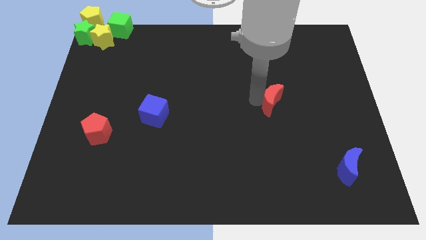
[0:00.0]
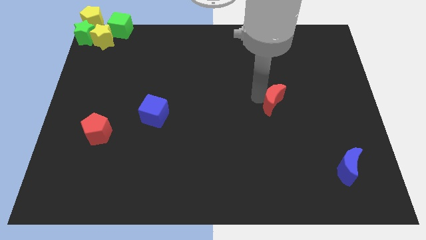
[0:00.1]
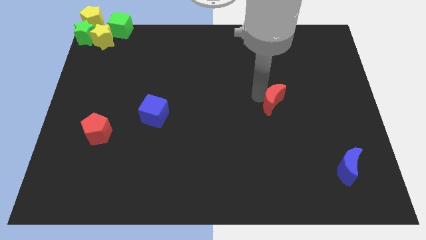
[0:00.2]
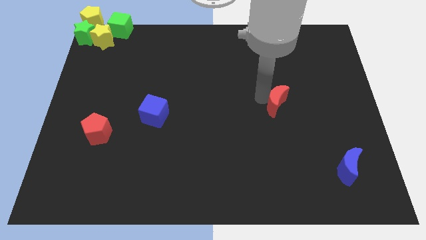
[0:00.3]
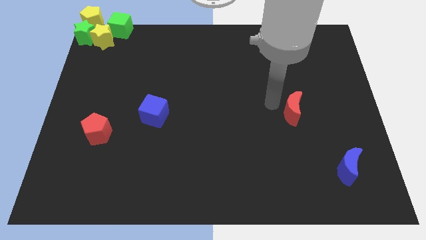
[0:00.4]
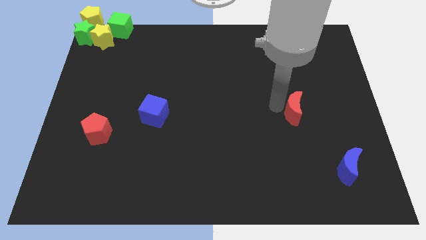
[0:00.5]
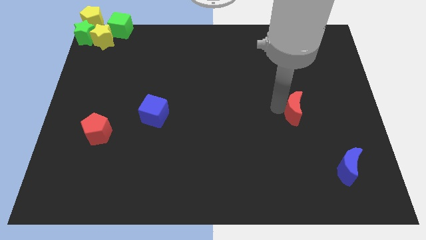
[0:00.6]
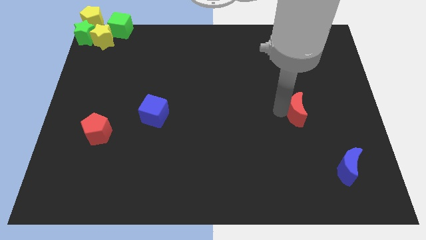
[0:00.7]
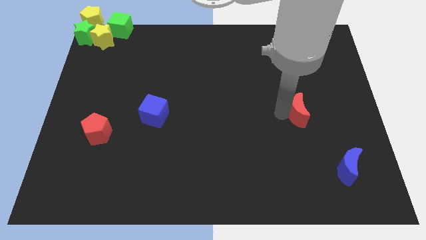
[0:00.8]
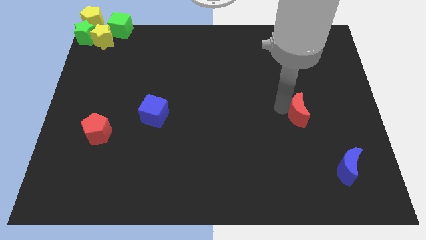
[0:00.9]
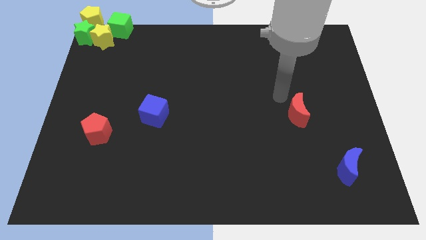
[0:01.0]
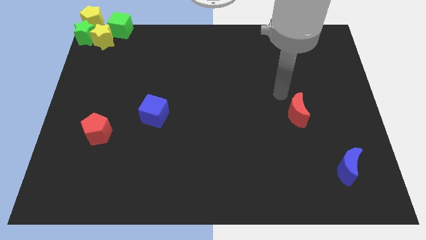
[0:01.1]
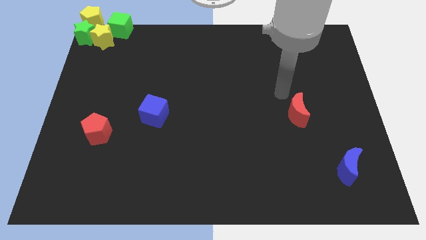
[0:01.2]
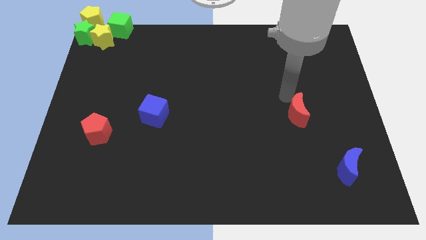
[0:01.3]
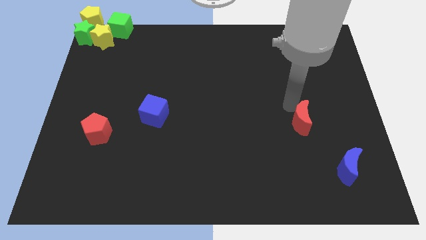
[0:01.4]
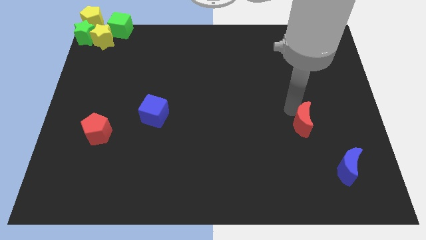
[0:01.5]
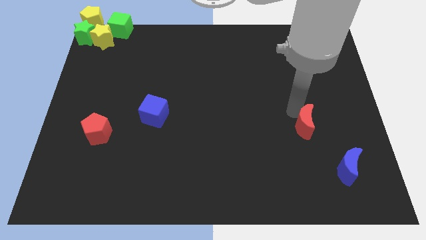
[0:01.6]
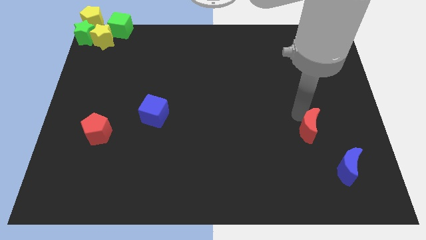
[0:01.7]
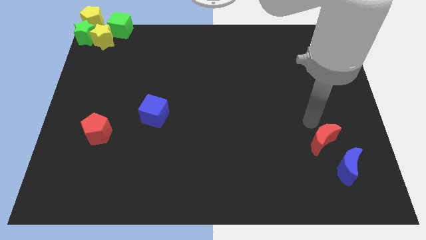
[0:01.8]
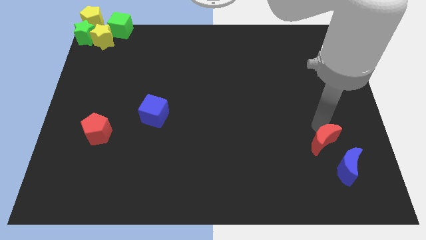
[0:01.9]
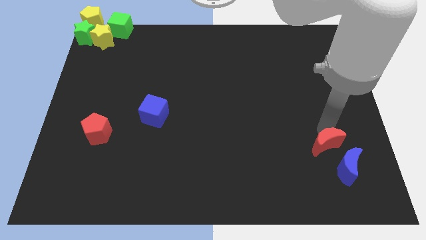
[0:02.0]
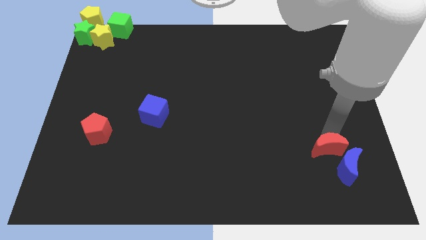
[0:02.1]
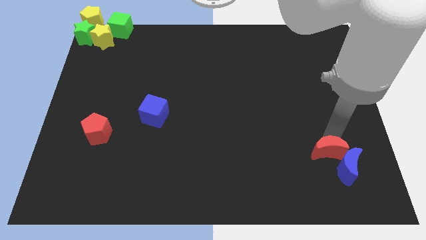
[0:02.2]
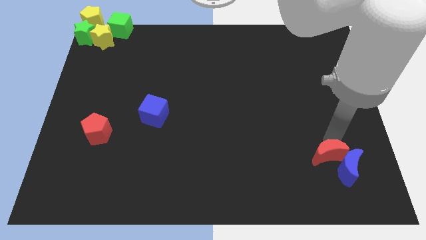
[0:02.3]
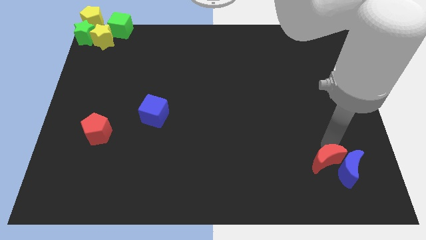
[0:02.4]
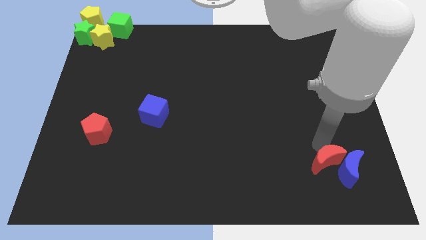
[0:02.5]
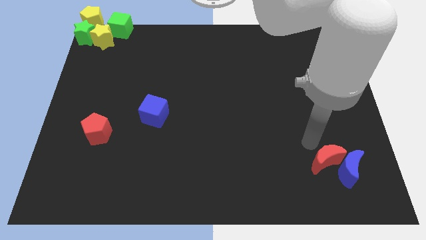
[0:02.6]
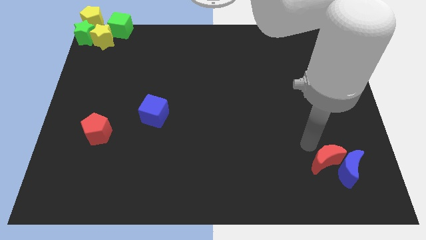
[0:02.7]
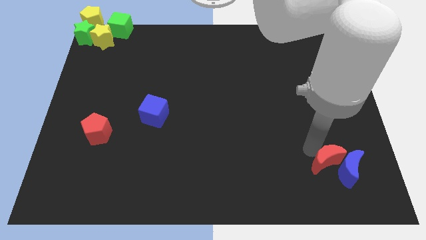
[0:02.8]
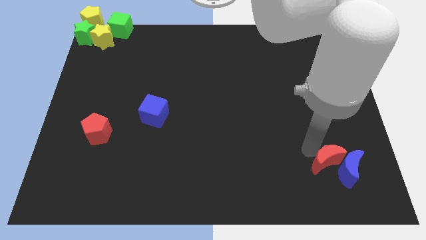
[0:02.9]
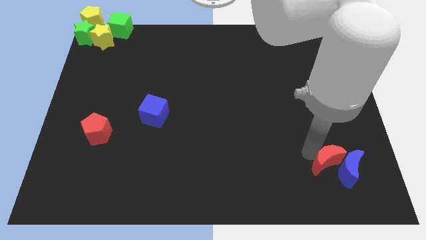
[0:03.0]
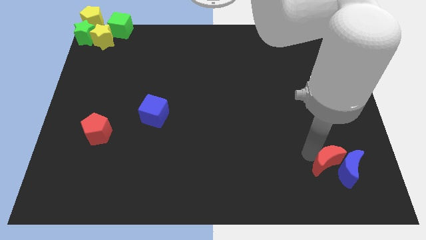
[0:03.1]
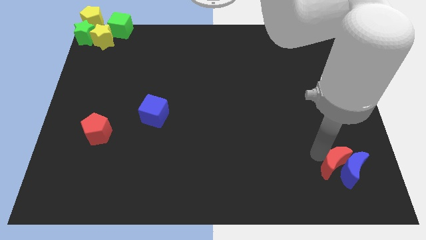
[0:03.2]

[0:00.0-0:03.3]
move the red crescent to the left of the blue crescent

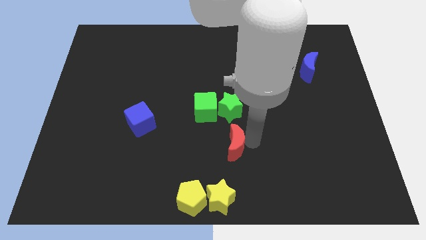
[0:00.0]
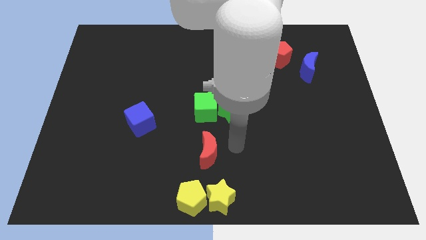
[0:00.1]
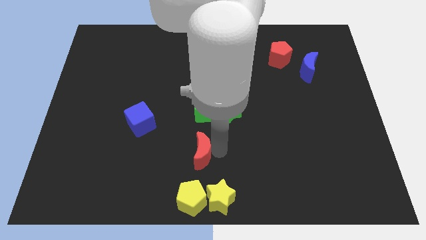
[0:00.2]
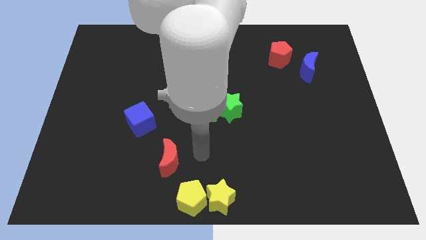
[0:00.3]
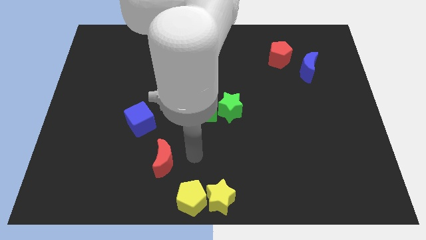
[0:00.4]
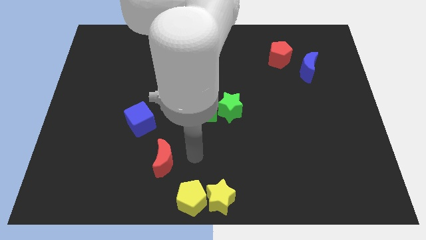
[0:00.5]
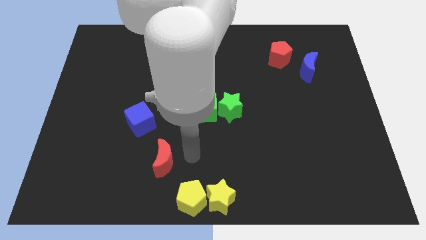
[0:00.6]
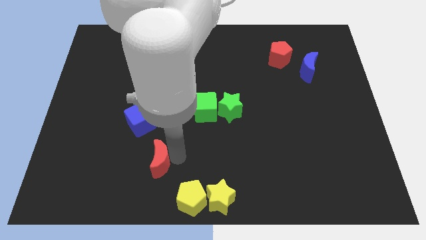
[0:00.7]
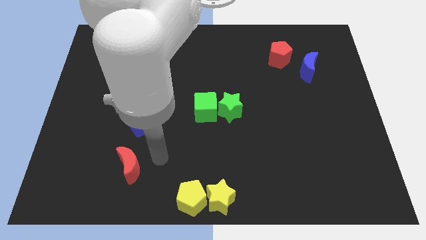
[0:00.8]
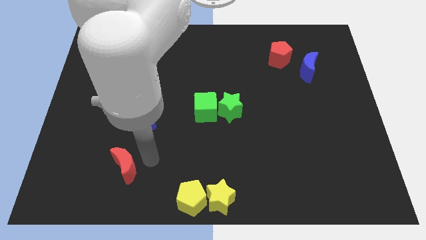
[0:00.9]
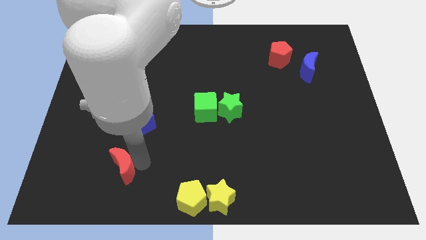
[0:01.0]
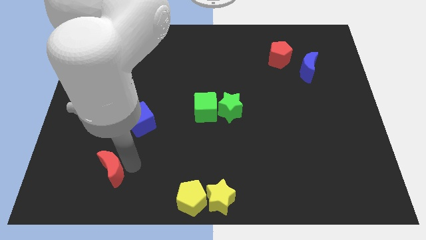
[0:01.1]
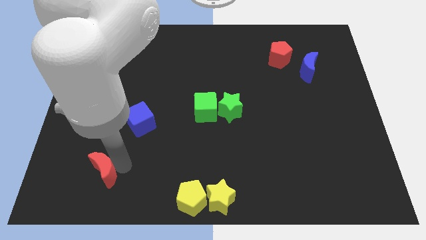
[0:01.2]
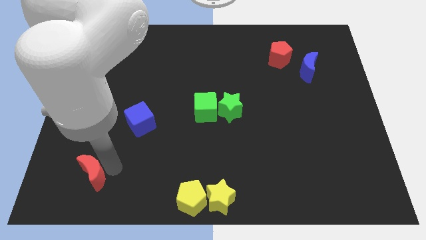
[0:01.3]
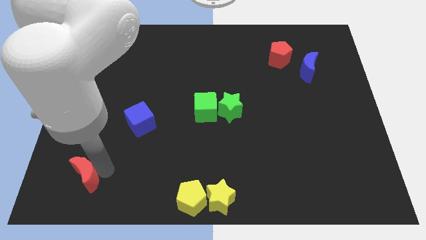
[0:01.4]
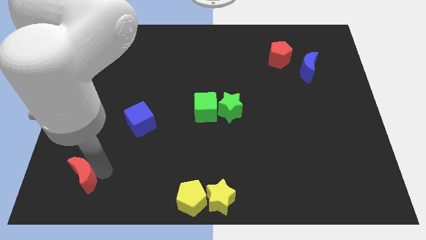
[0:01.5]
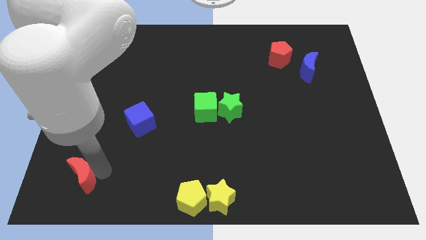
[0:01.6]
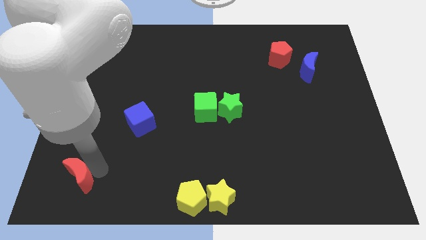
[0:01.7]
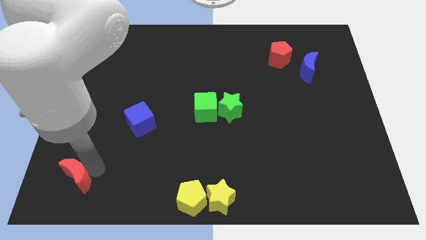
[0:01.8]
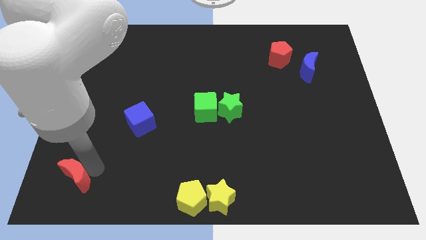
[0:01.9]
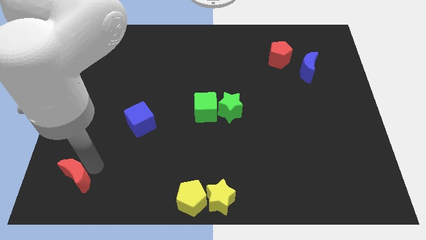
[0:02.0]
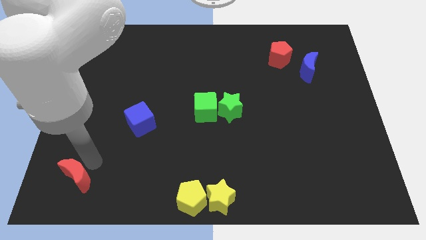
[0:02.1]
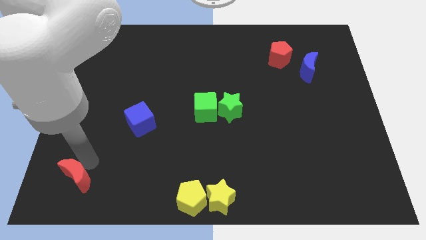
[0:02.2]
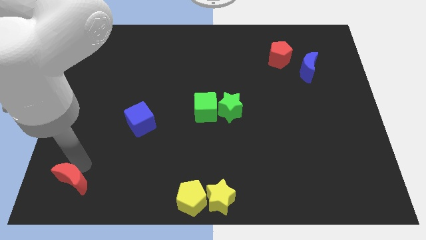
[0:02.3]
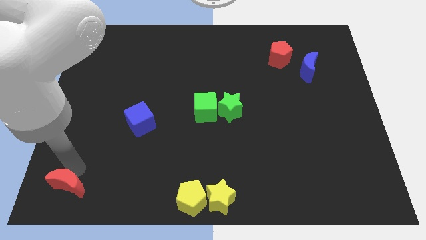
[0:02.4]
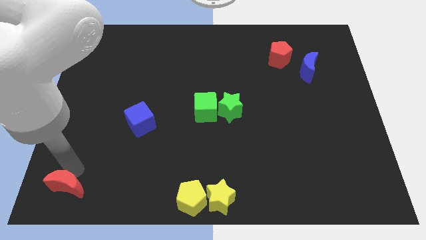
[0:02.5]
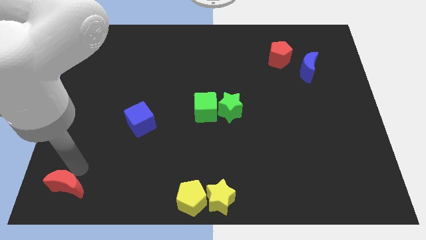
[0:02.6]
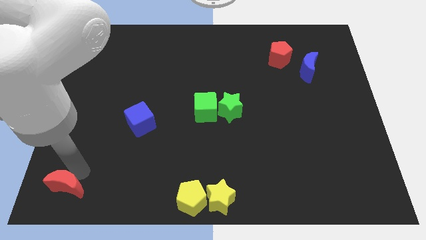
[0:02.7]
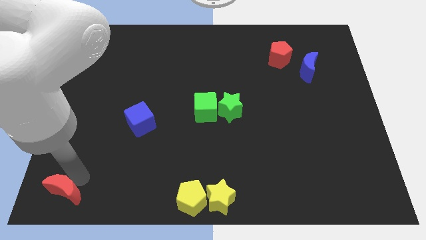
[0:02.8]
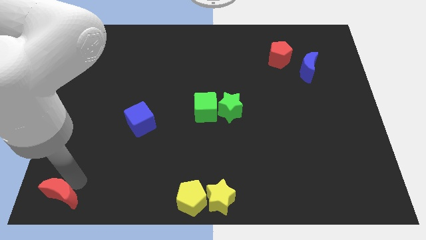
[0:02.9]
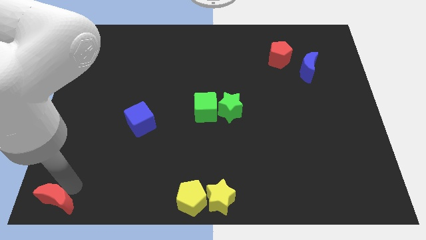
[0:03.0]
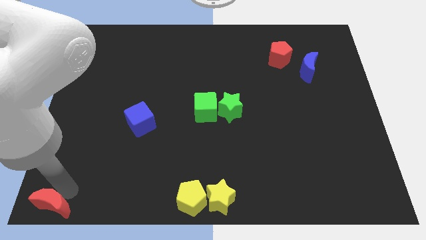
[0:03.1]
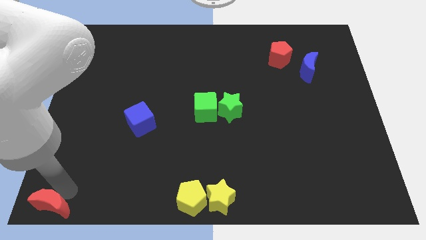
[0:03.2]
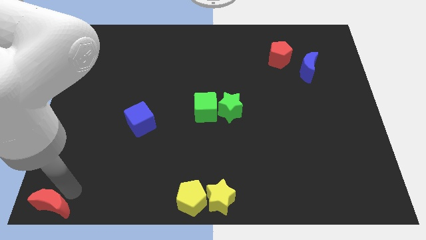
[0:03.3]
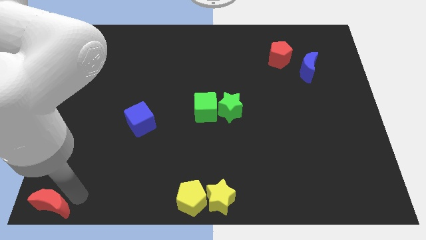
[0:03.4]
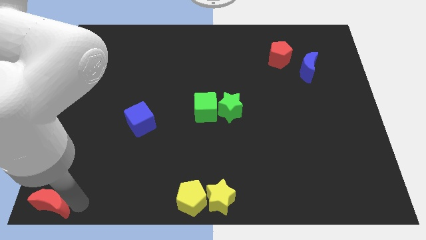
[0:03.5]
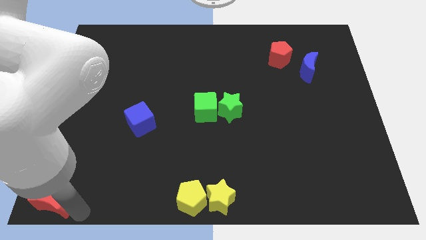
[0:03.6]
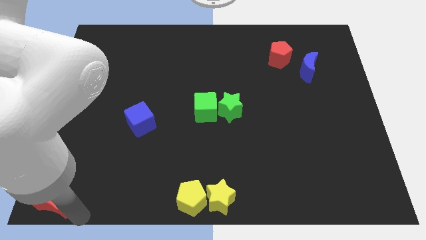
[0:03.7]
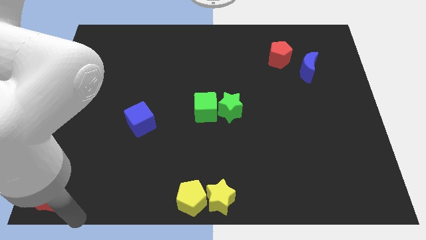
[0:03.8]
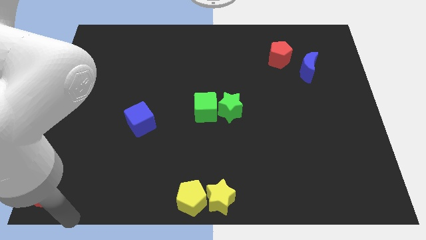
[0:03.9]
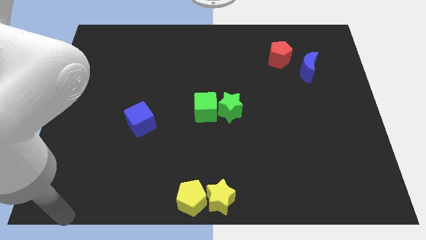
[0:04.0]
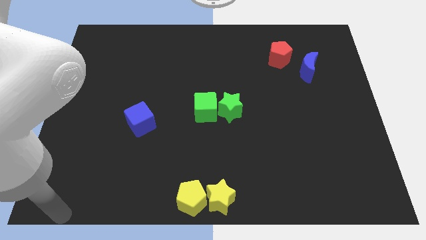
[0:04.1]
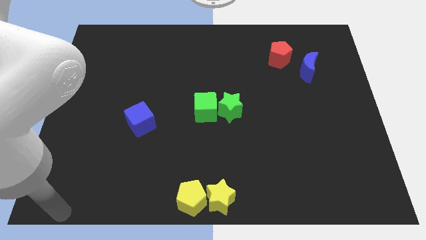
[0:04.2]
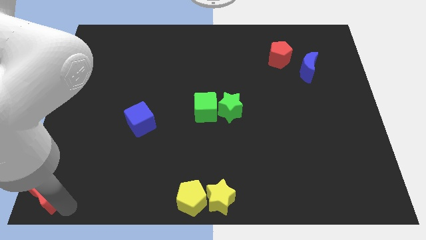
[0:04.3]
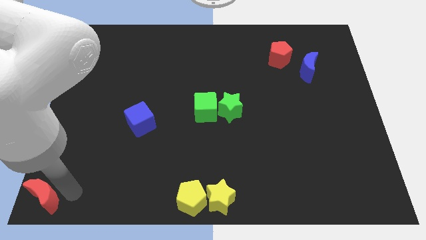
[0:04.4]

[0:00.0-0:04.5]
put the red crescent at the bottom left of the table

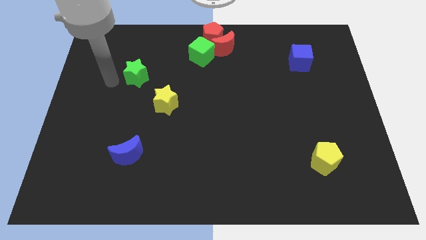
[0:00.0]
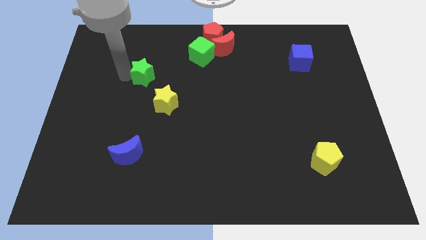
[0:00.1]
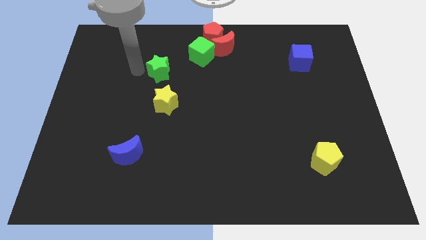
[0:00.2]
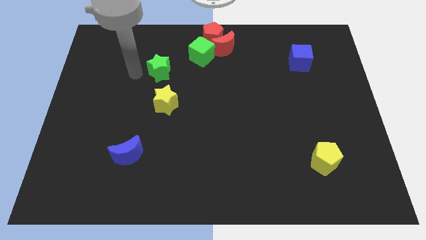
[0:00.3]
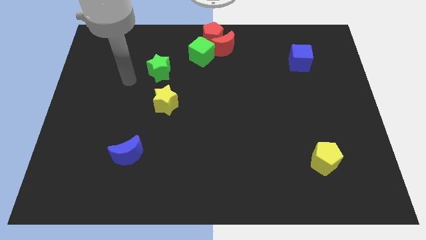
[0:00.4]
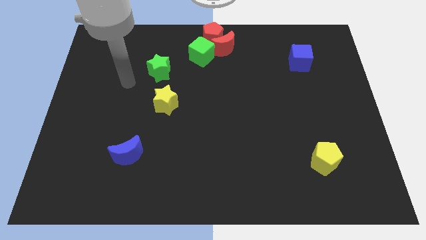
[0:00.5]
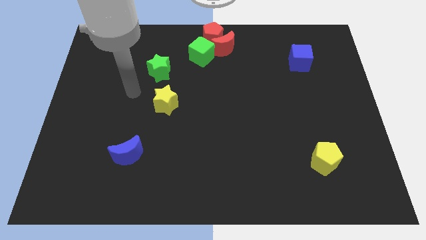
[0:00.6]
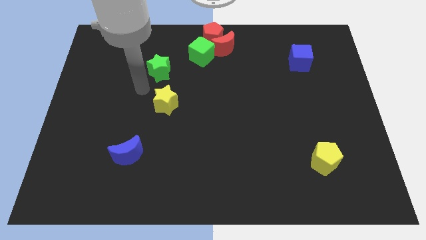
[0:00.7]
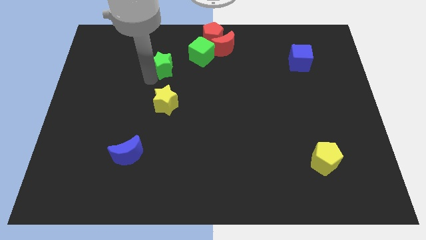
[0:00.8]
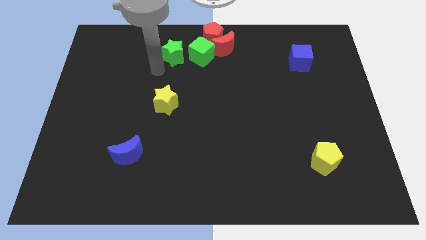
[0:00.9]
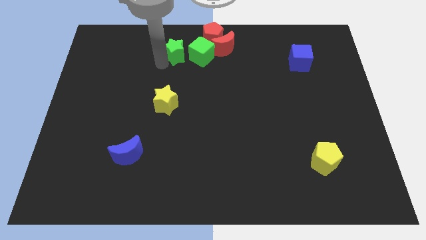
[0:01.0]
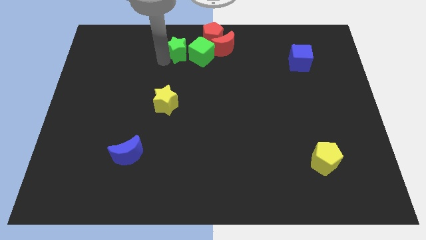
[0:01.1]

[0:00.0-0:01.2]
place the green star to the left side of the green cube

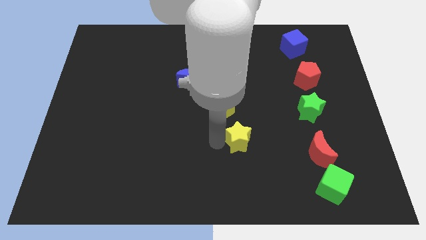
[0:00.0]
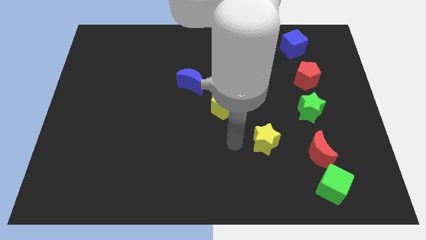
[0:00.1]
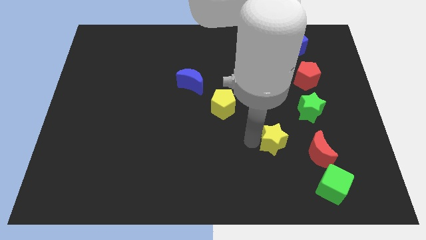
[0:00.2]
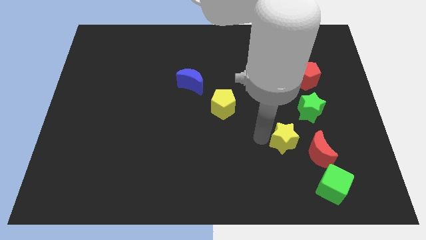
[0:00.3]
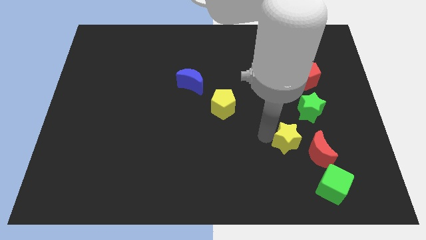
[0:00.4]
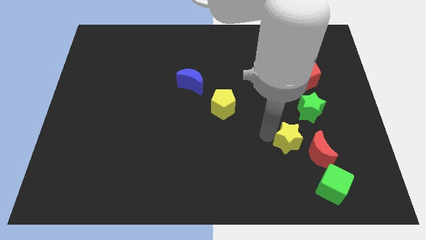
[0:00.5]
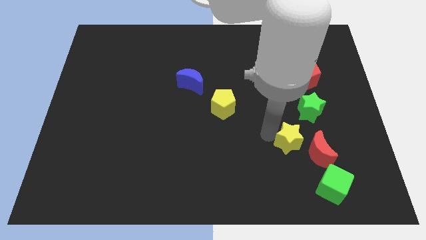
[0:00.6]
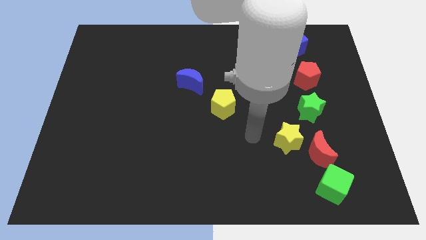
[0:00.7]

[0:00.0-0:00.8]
move the yellow star to the left side of red crescent
